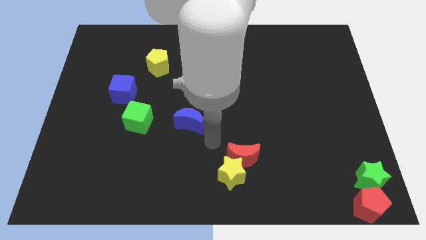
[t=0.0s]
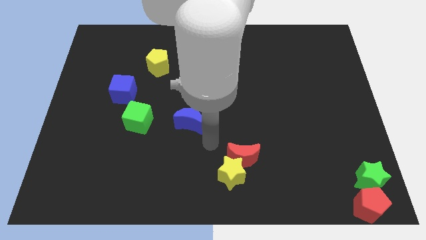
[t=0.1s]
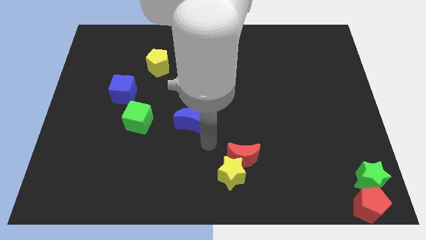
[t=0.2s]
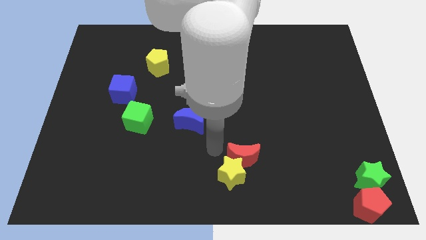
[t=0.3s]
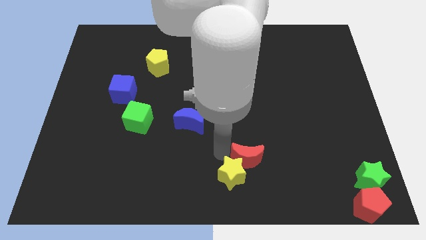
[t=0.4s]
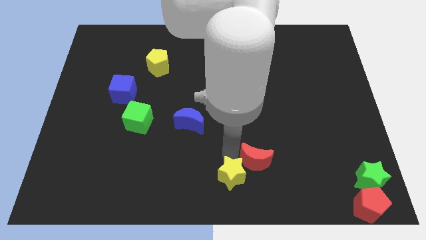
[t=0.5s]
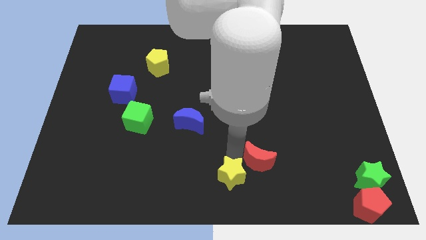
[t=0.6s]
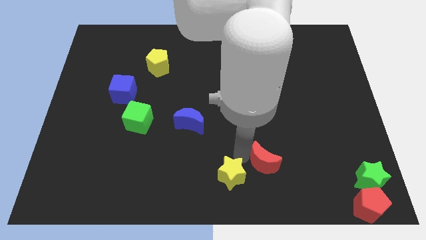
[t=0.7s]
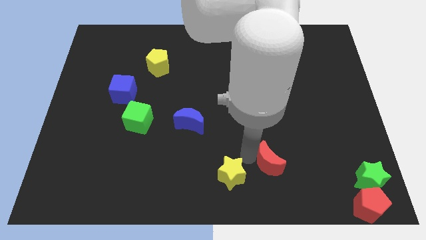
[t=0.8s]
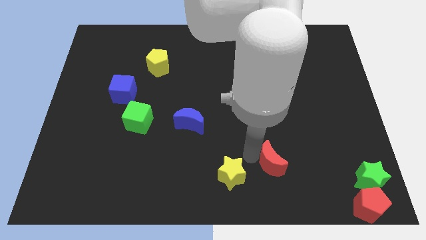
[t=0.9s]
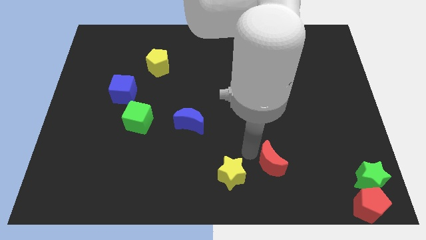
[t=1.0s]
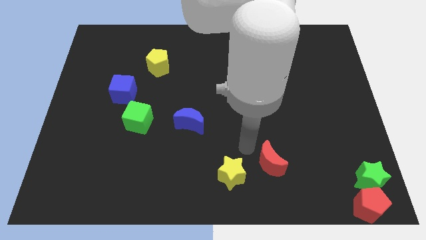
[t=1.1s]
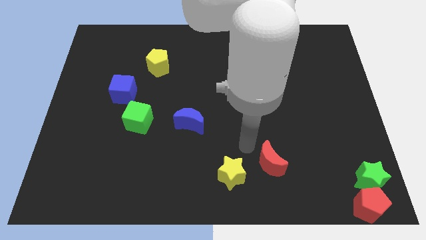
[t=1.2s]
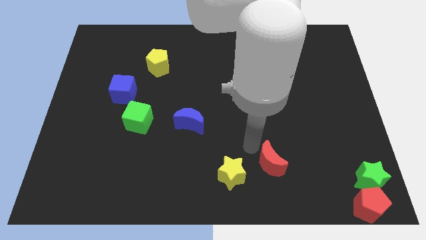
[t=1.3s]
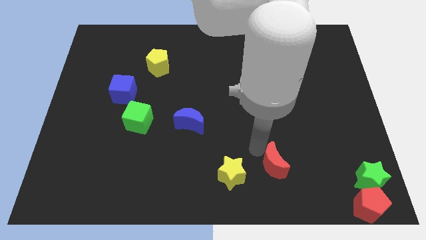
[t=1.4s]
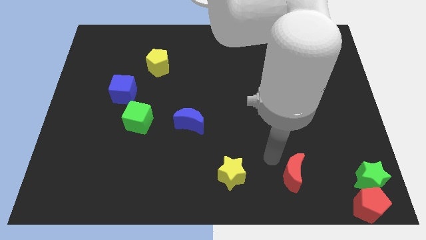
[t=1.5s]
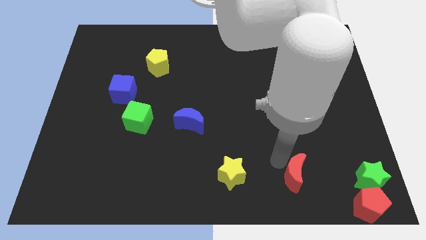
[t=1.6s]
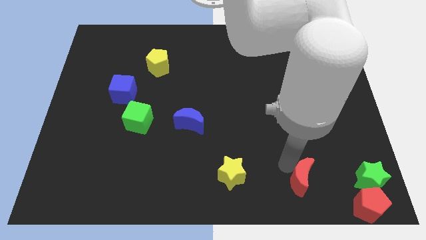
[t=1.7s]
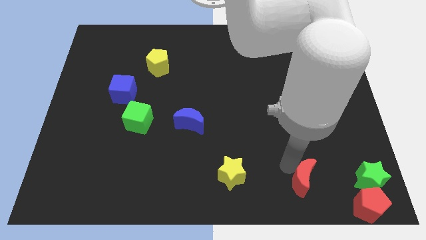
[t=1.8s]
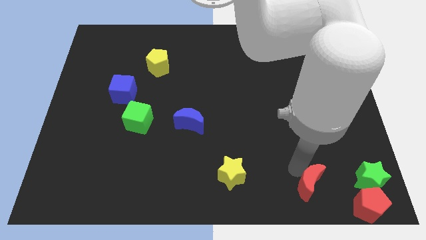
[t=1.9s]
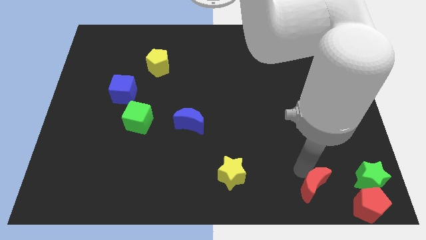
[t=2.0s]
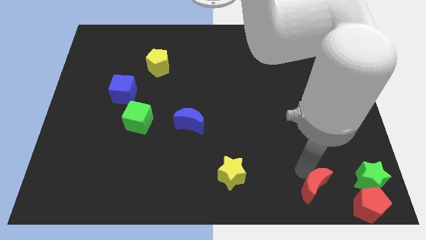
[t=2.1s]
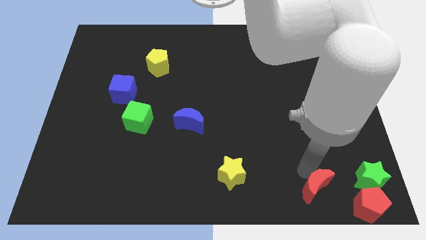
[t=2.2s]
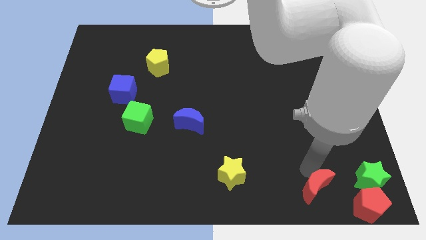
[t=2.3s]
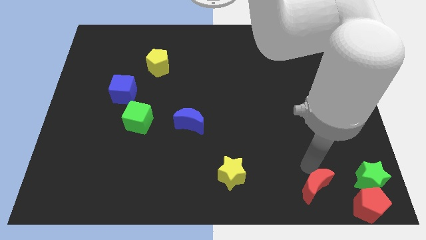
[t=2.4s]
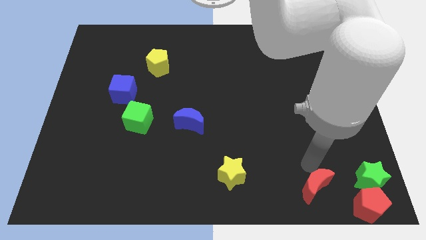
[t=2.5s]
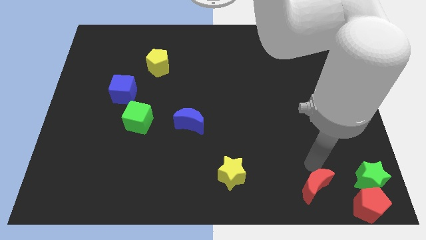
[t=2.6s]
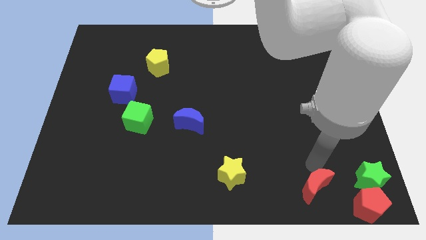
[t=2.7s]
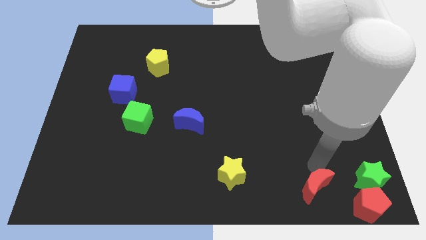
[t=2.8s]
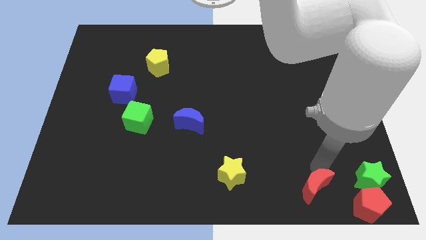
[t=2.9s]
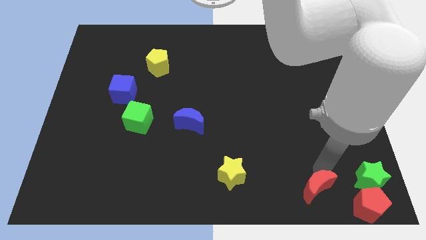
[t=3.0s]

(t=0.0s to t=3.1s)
separate red moon from yellow star

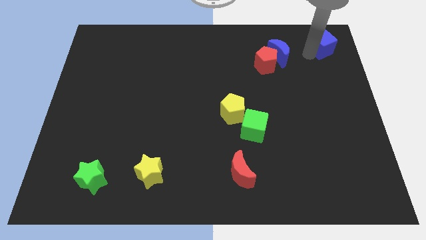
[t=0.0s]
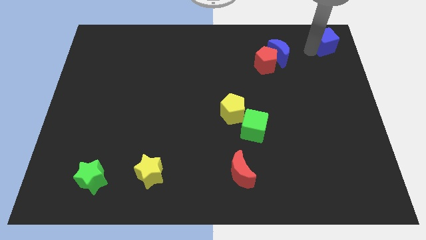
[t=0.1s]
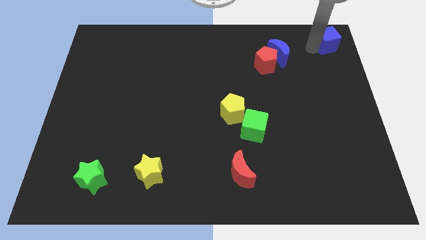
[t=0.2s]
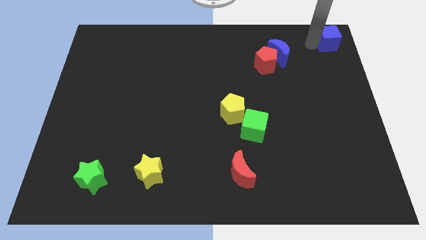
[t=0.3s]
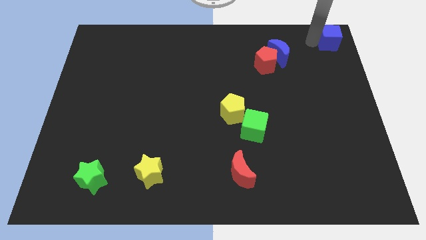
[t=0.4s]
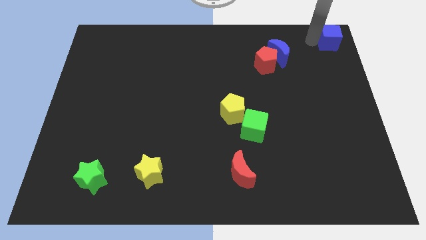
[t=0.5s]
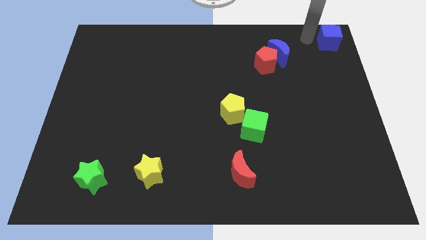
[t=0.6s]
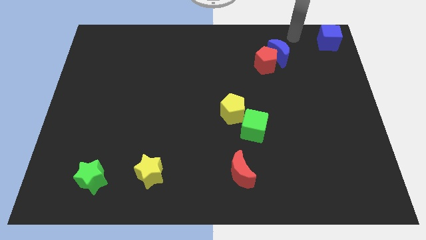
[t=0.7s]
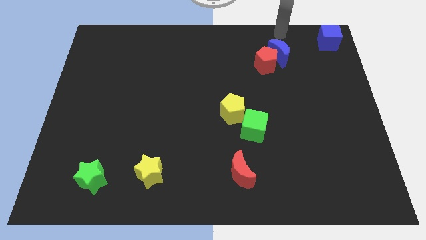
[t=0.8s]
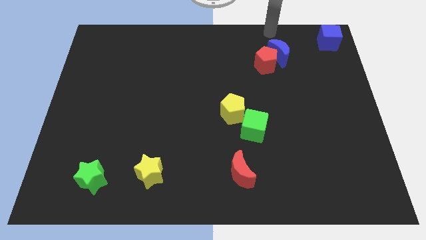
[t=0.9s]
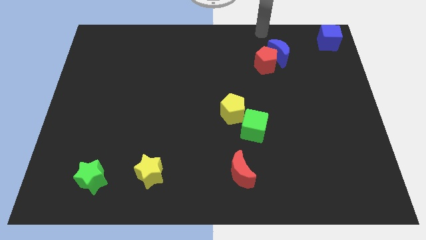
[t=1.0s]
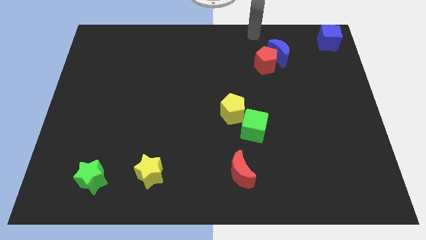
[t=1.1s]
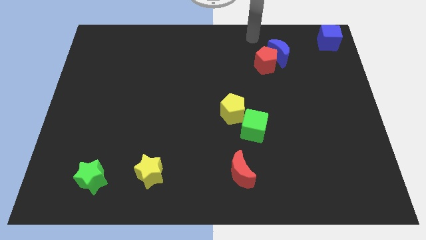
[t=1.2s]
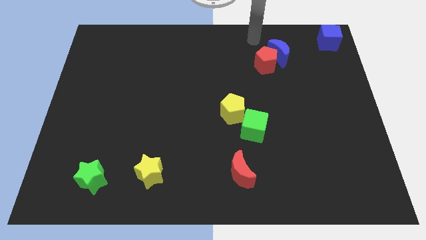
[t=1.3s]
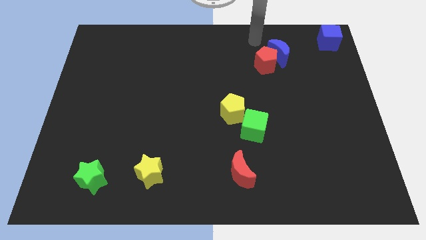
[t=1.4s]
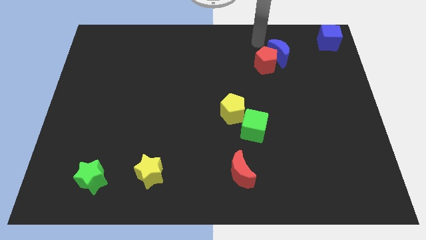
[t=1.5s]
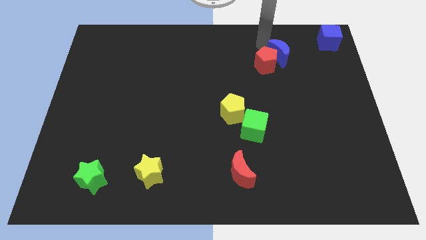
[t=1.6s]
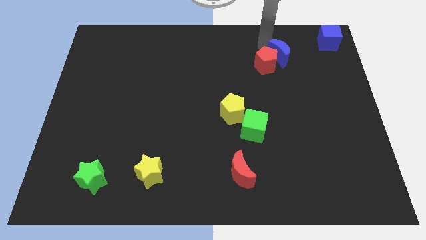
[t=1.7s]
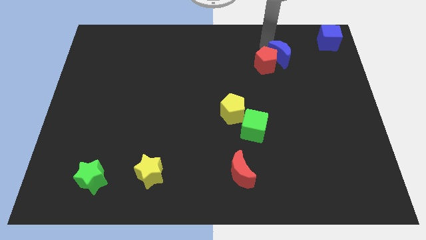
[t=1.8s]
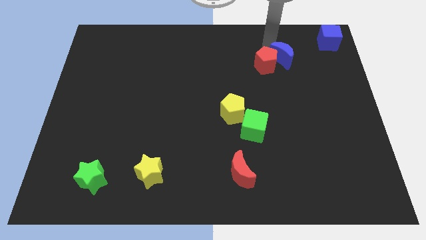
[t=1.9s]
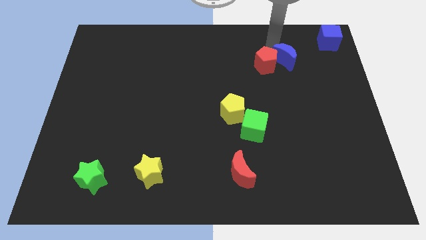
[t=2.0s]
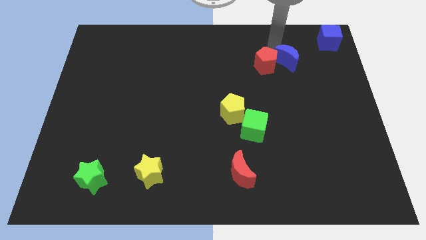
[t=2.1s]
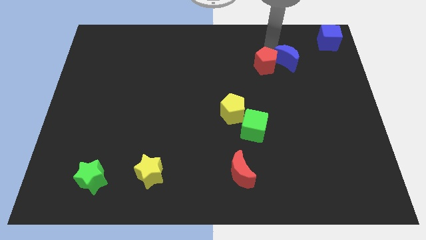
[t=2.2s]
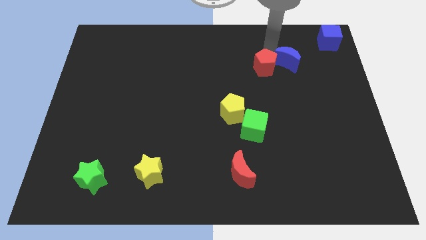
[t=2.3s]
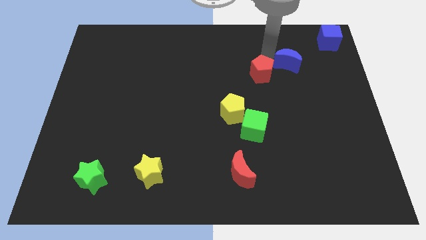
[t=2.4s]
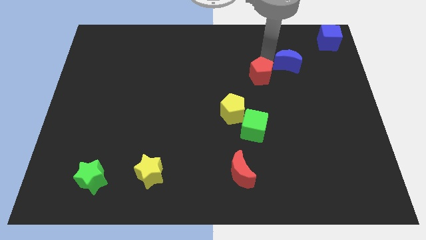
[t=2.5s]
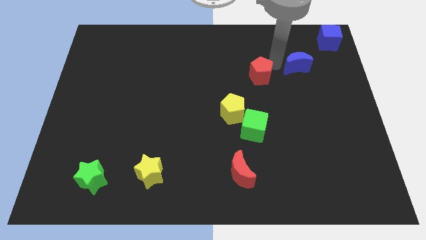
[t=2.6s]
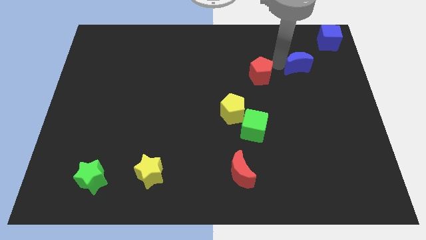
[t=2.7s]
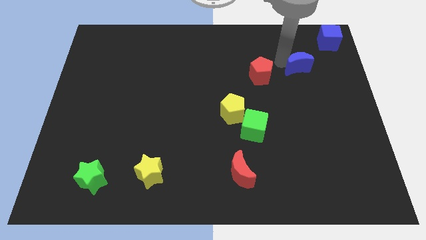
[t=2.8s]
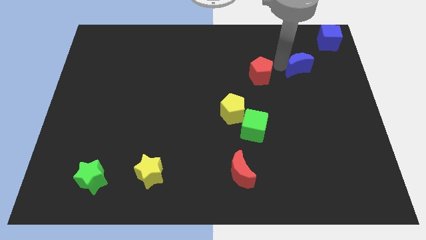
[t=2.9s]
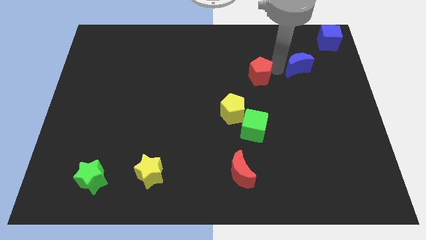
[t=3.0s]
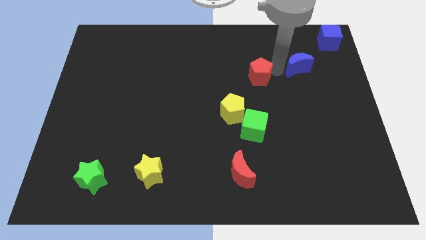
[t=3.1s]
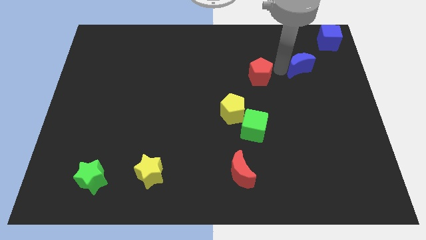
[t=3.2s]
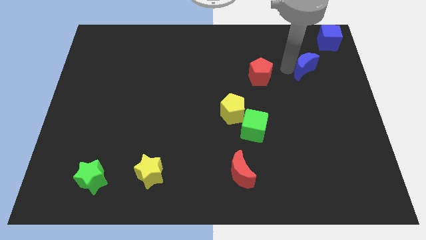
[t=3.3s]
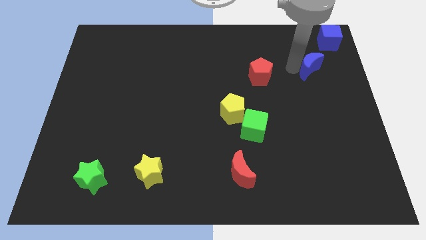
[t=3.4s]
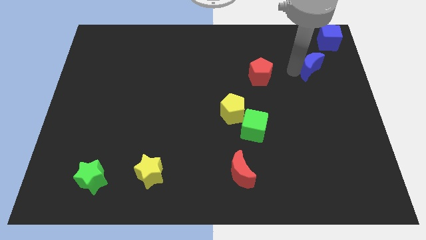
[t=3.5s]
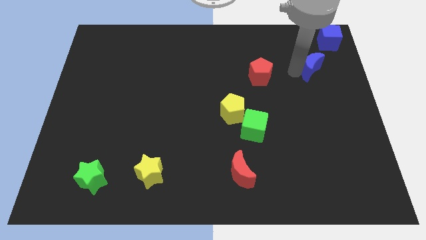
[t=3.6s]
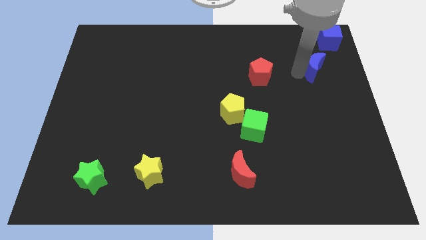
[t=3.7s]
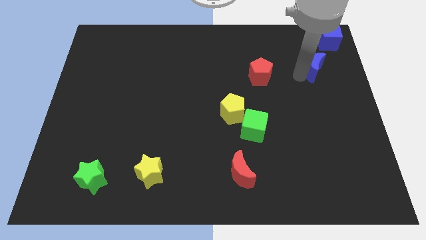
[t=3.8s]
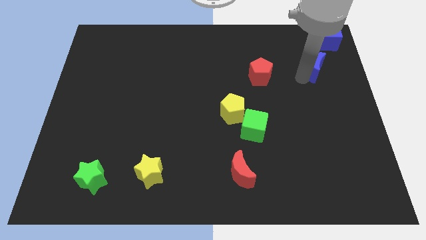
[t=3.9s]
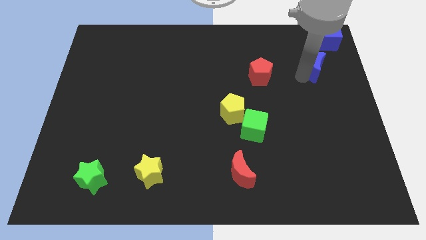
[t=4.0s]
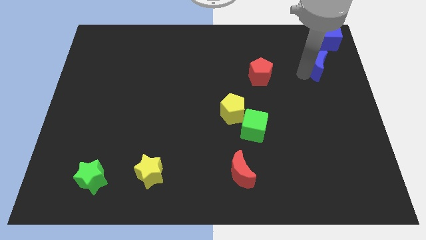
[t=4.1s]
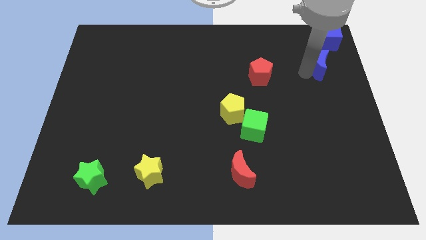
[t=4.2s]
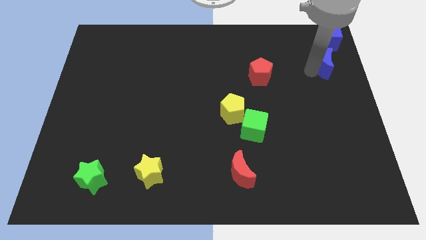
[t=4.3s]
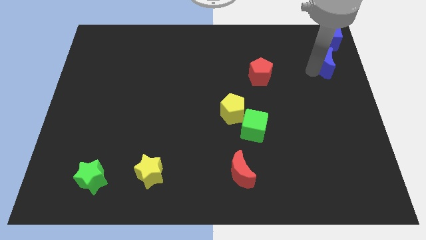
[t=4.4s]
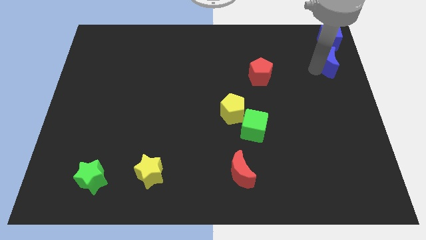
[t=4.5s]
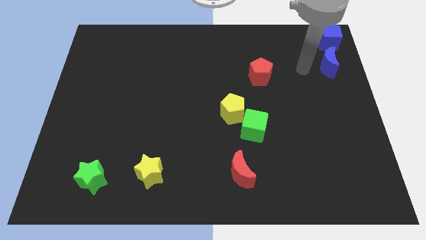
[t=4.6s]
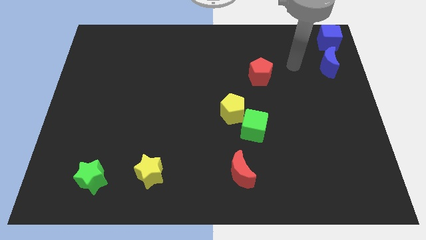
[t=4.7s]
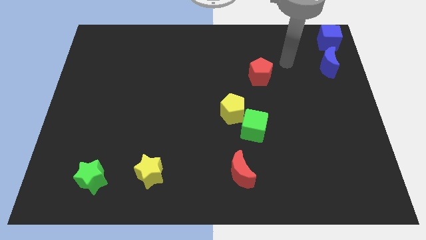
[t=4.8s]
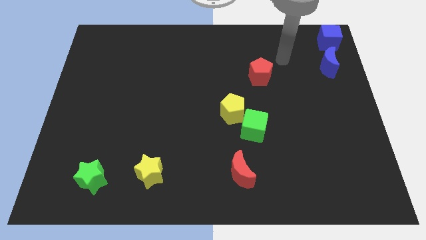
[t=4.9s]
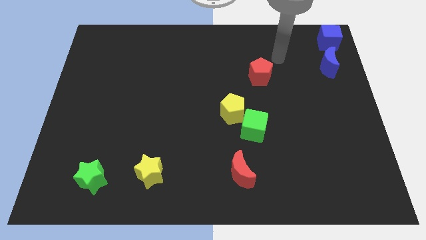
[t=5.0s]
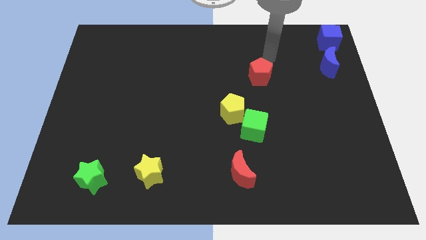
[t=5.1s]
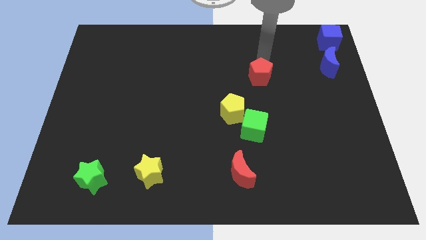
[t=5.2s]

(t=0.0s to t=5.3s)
move the blue crescent below the blue cube

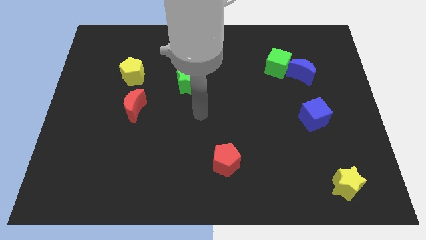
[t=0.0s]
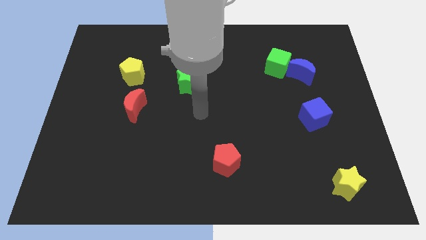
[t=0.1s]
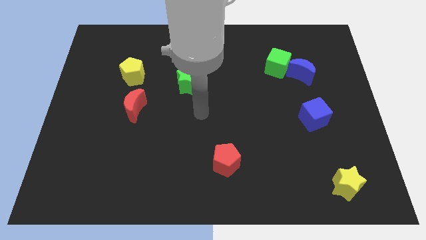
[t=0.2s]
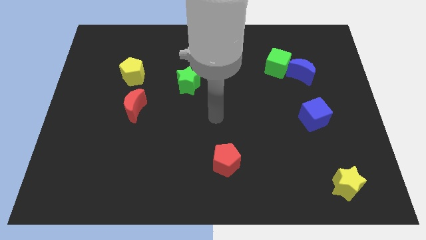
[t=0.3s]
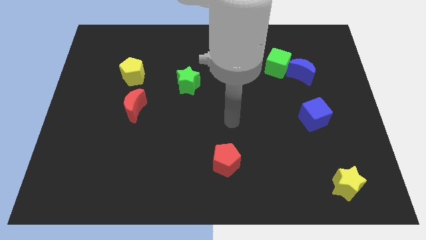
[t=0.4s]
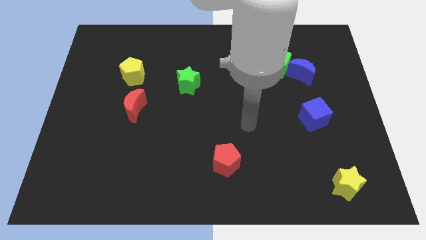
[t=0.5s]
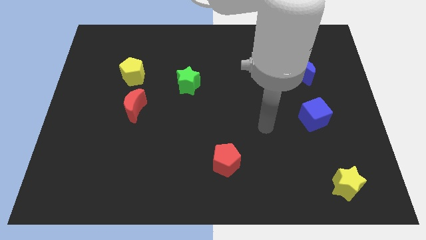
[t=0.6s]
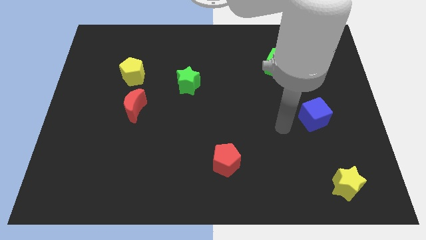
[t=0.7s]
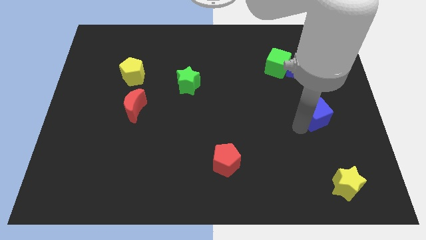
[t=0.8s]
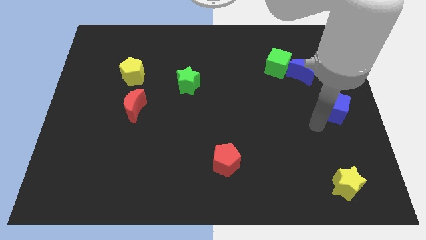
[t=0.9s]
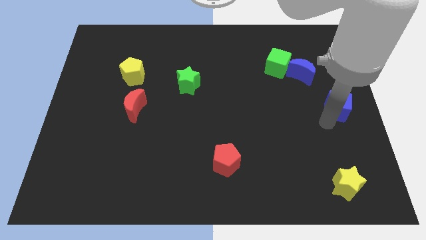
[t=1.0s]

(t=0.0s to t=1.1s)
move the blue cube to the right side of the table
